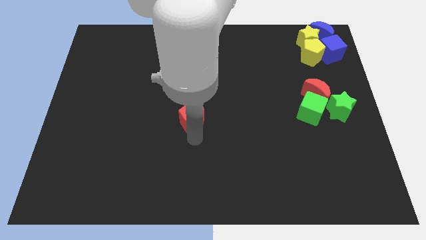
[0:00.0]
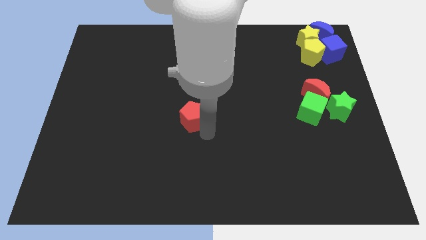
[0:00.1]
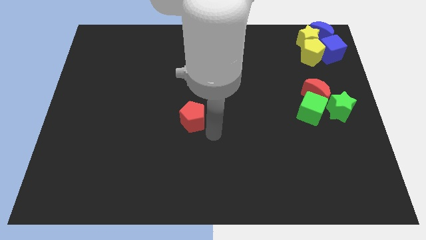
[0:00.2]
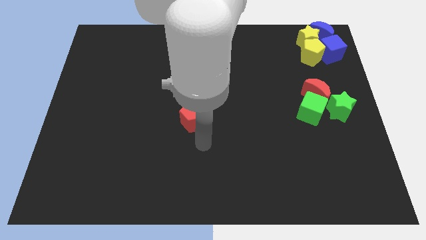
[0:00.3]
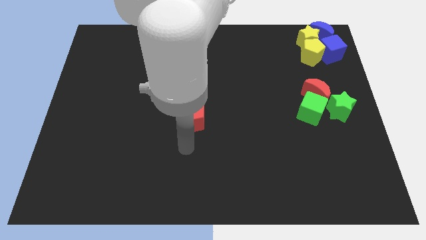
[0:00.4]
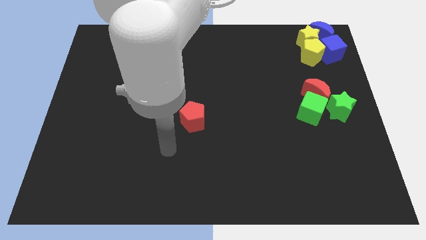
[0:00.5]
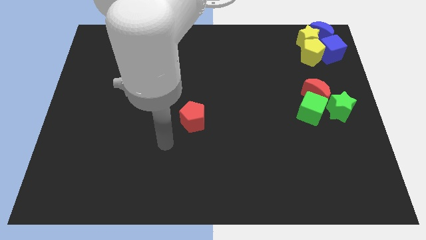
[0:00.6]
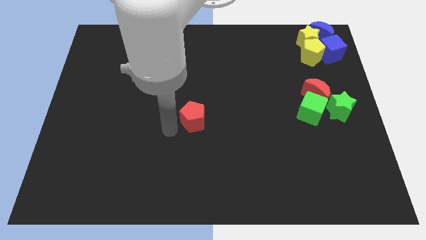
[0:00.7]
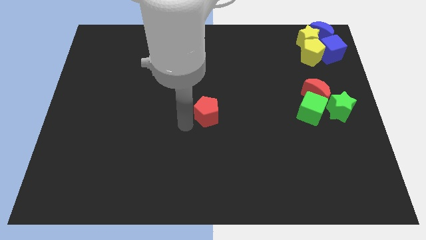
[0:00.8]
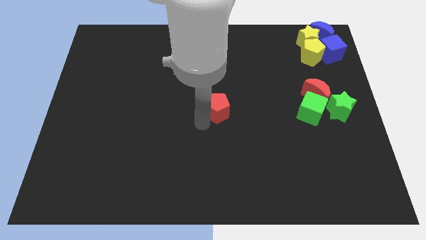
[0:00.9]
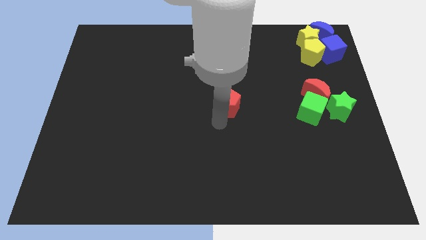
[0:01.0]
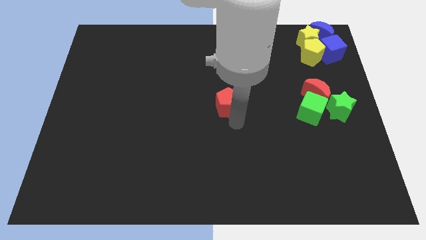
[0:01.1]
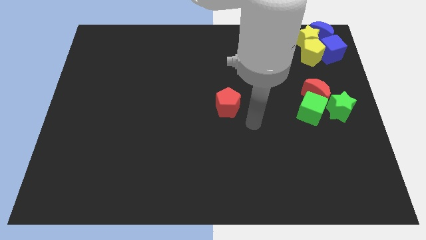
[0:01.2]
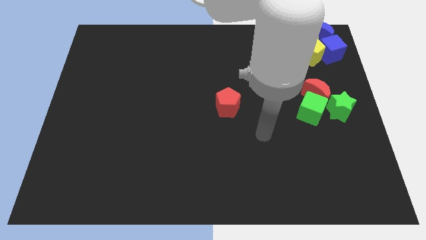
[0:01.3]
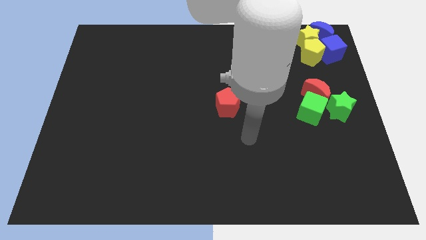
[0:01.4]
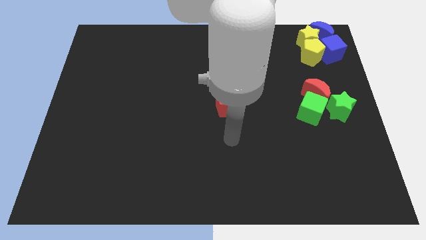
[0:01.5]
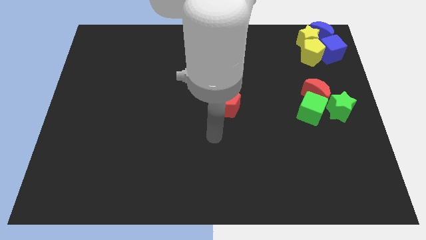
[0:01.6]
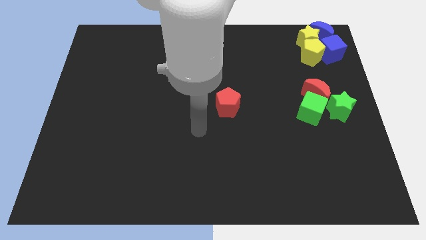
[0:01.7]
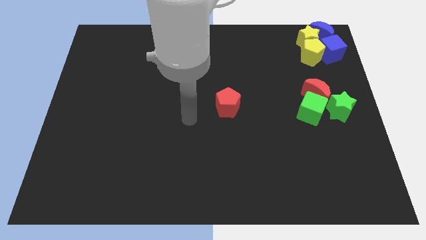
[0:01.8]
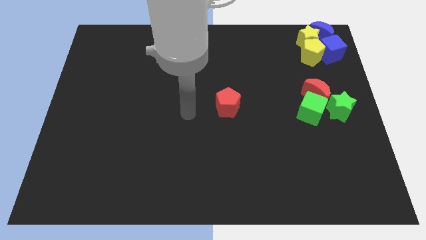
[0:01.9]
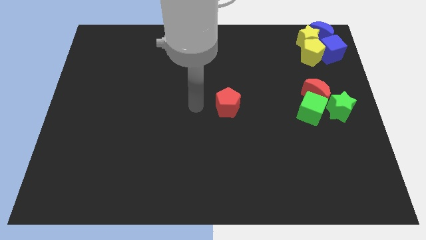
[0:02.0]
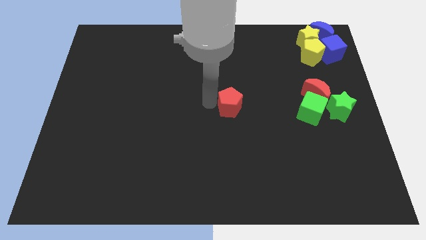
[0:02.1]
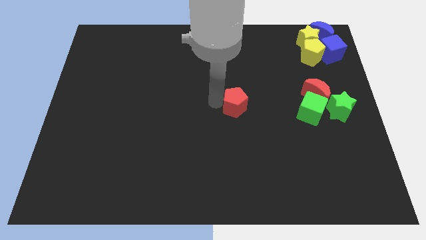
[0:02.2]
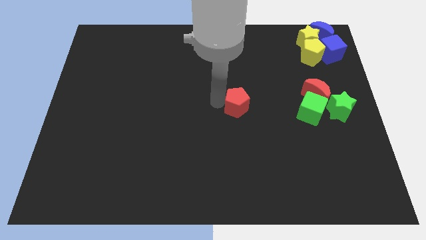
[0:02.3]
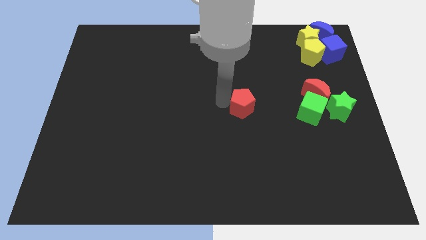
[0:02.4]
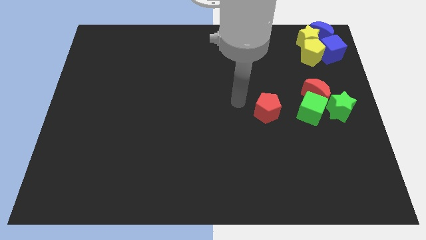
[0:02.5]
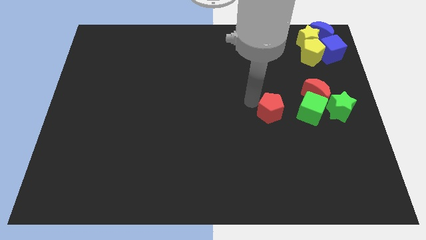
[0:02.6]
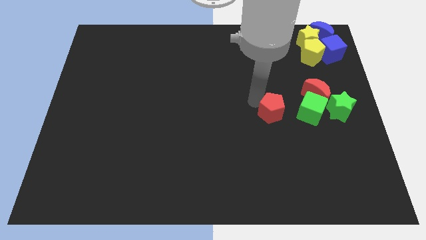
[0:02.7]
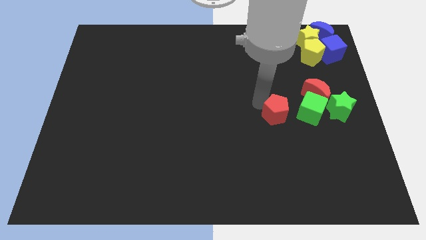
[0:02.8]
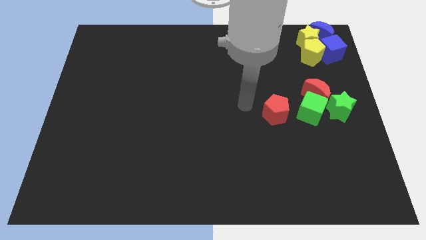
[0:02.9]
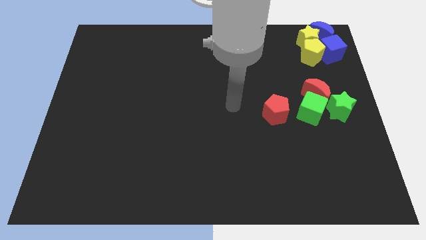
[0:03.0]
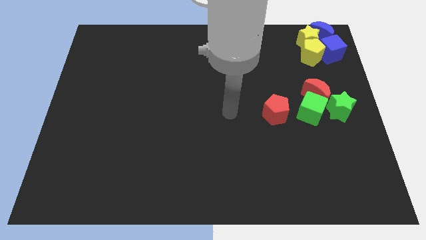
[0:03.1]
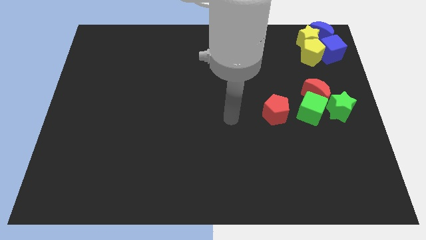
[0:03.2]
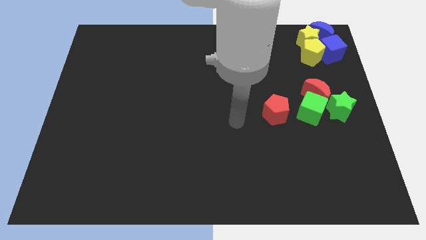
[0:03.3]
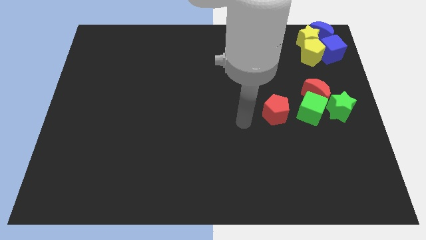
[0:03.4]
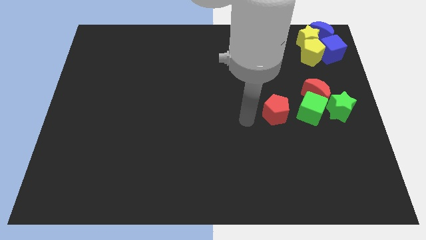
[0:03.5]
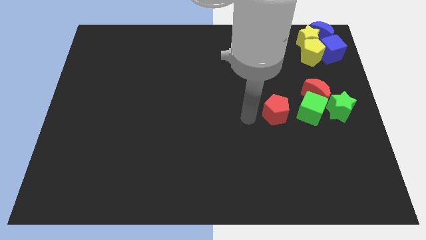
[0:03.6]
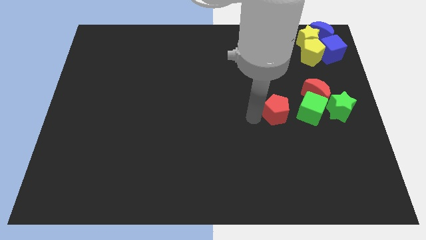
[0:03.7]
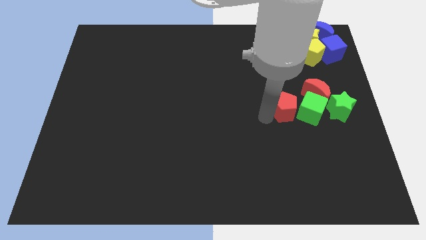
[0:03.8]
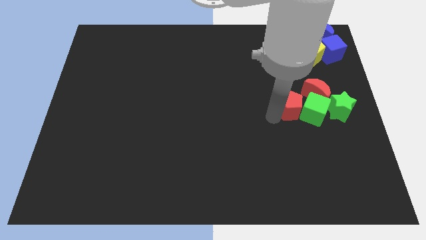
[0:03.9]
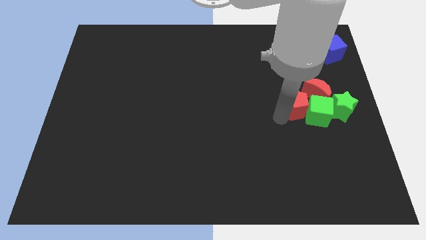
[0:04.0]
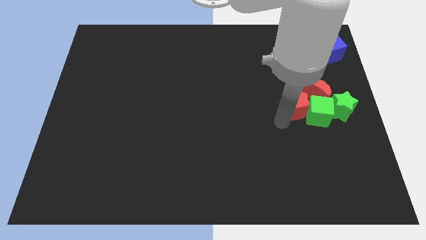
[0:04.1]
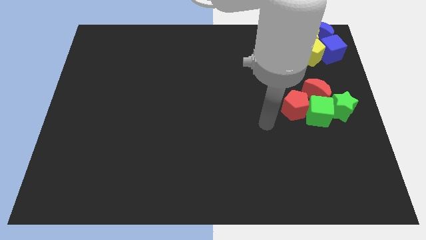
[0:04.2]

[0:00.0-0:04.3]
slide the red pentagon into the left side of the green cube

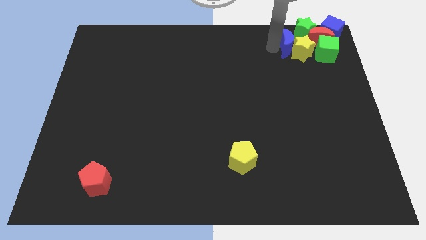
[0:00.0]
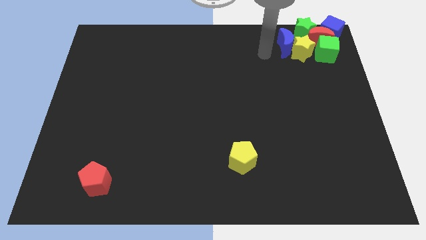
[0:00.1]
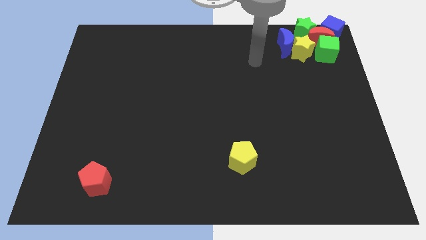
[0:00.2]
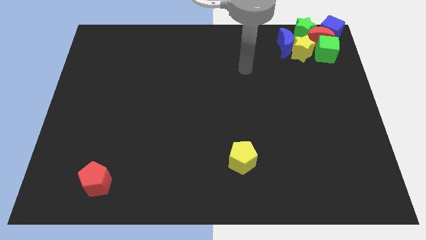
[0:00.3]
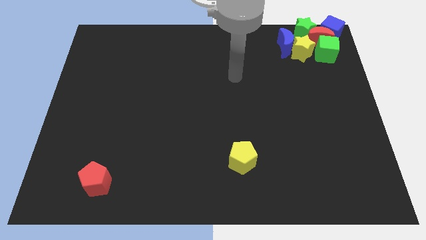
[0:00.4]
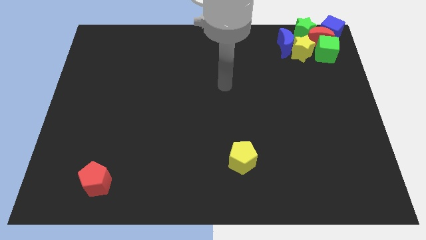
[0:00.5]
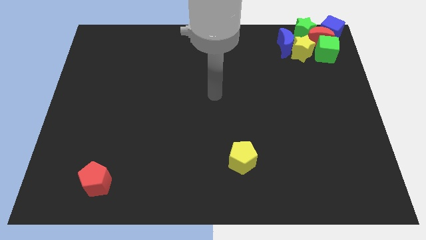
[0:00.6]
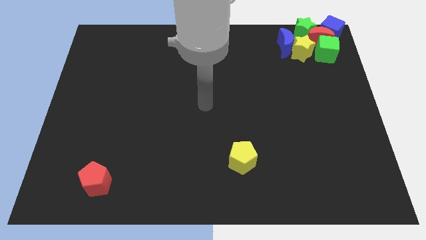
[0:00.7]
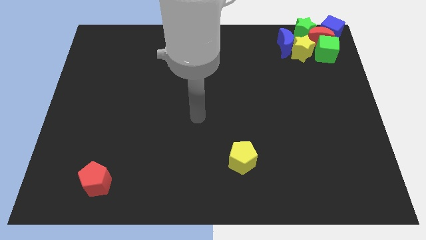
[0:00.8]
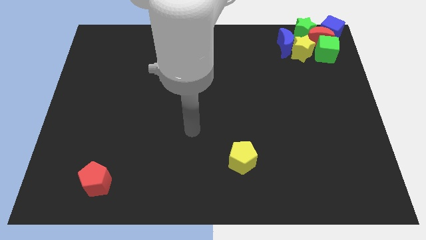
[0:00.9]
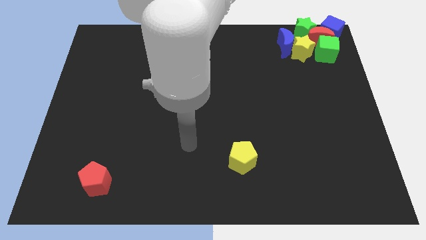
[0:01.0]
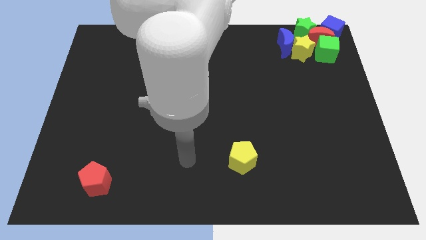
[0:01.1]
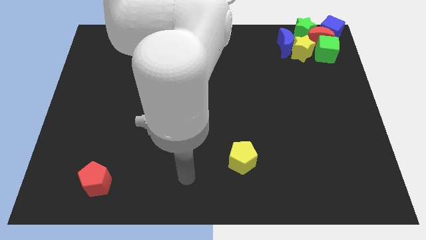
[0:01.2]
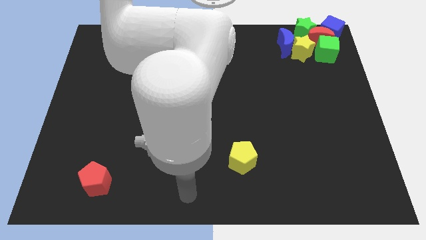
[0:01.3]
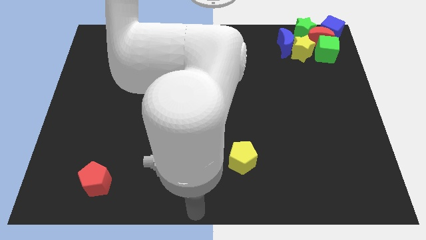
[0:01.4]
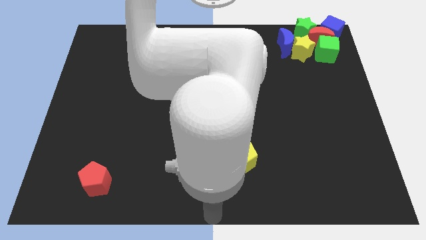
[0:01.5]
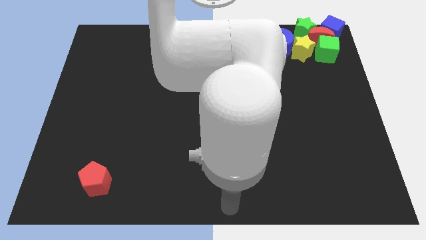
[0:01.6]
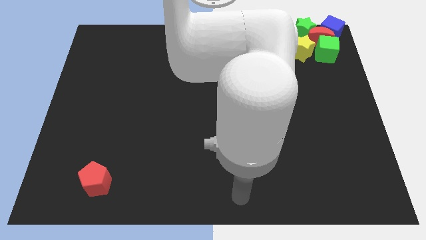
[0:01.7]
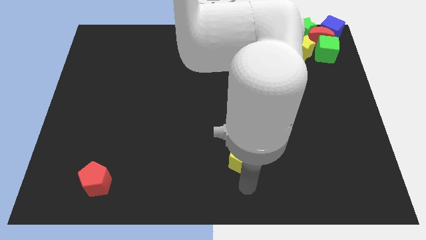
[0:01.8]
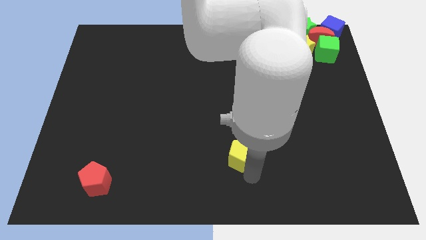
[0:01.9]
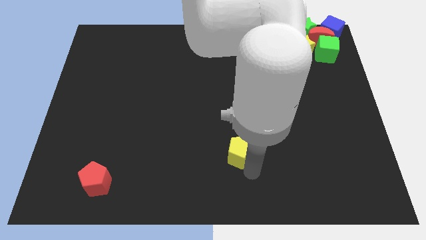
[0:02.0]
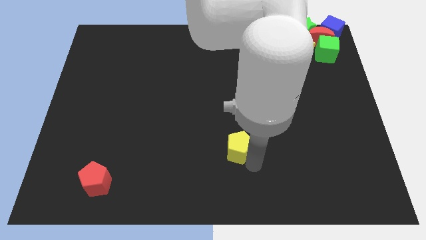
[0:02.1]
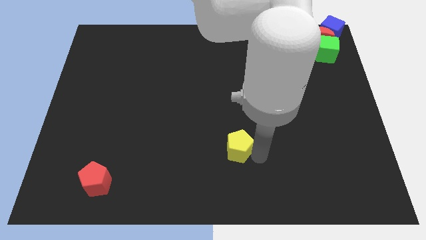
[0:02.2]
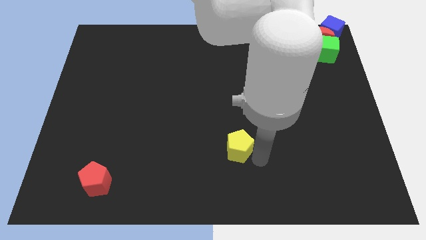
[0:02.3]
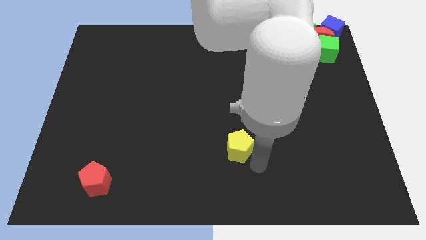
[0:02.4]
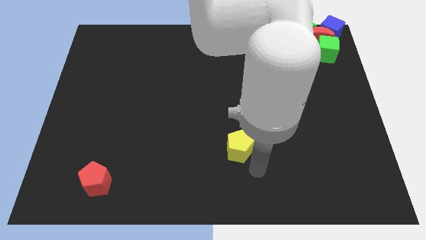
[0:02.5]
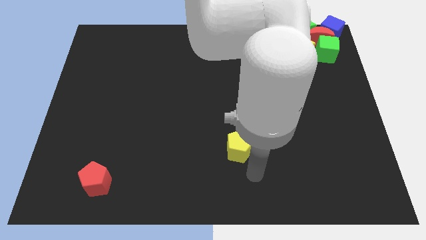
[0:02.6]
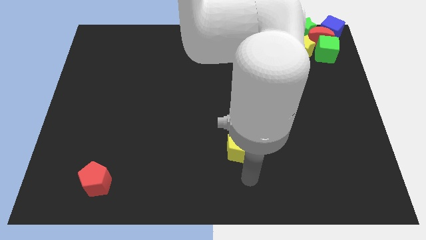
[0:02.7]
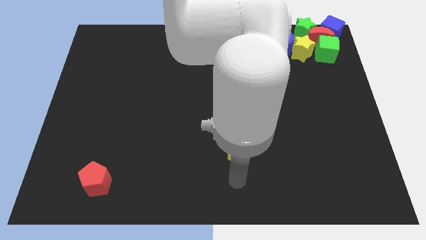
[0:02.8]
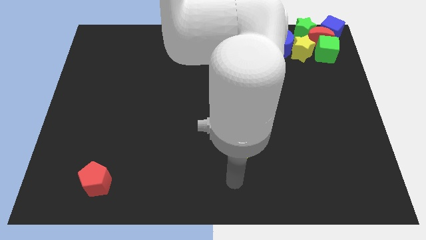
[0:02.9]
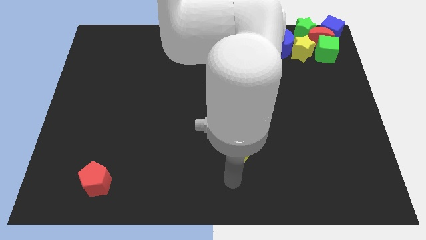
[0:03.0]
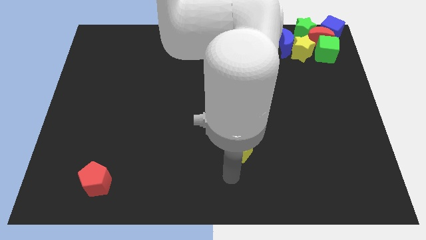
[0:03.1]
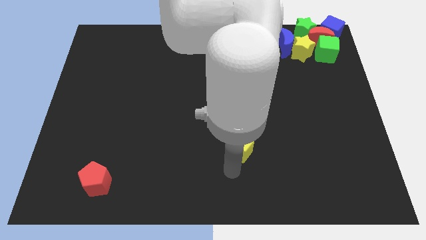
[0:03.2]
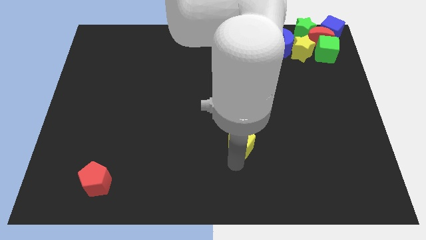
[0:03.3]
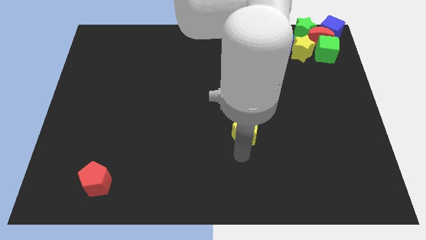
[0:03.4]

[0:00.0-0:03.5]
move your arm away from the blue moon

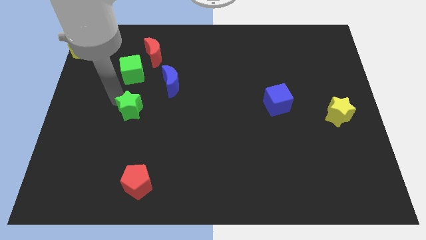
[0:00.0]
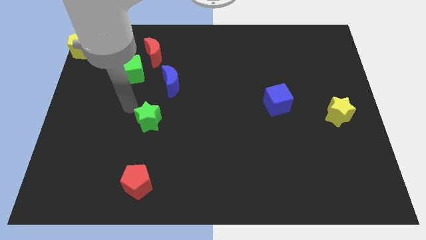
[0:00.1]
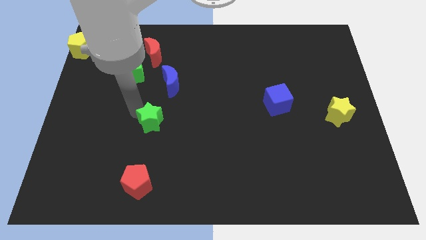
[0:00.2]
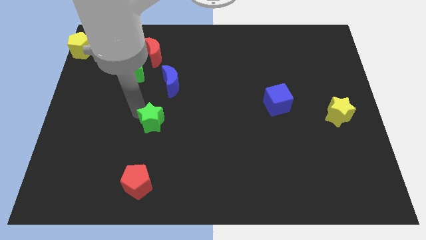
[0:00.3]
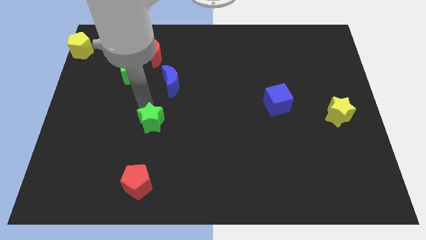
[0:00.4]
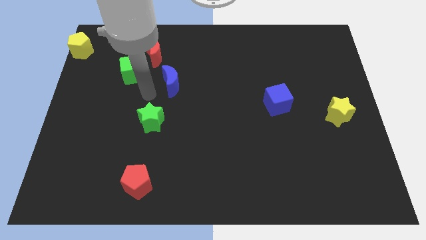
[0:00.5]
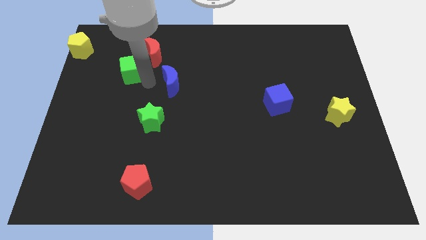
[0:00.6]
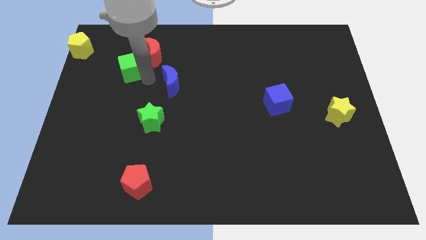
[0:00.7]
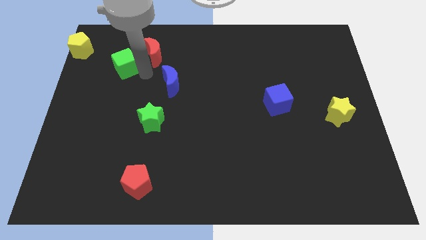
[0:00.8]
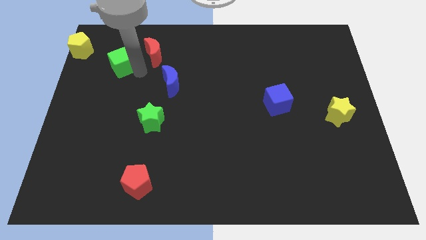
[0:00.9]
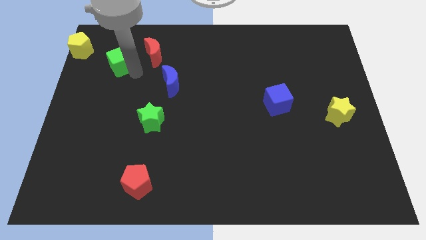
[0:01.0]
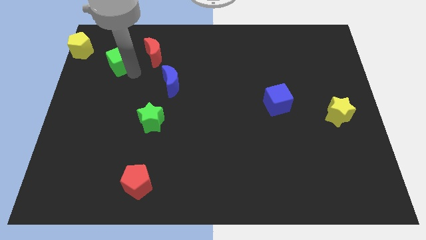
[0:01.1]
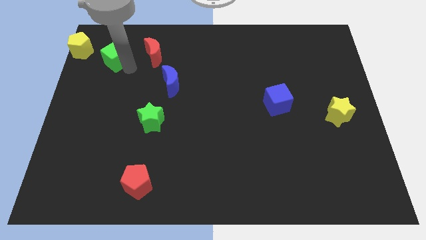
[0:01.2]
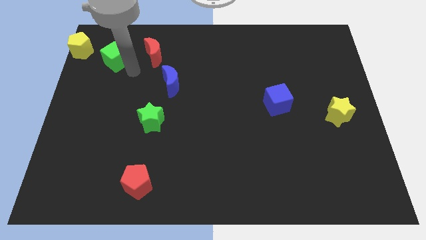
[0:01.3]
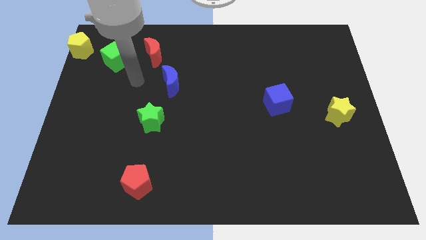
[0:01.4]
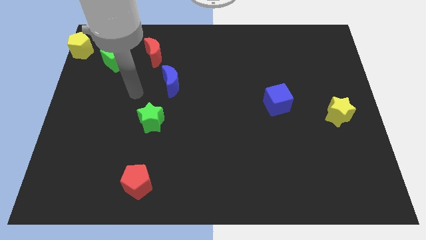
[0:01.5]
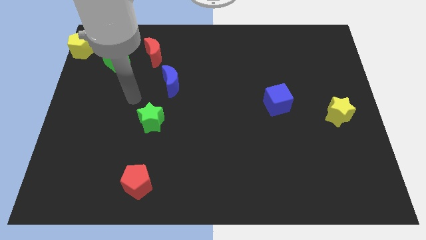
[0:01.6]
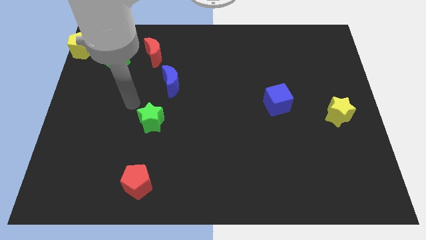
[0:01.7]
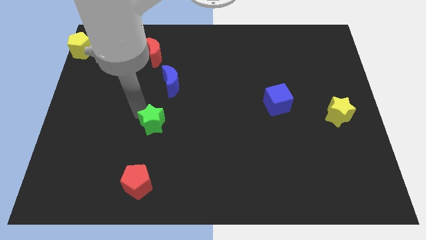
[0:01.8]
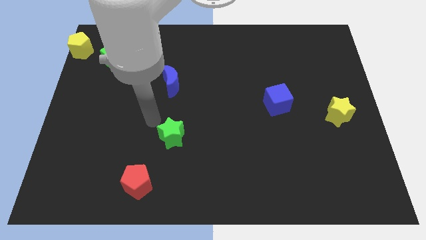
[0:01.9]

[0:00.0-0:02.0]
move the green cube left to the red crescent
